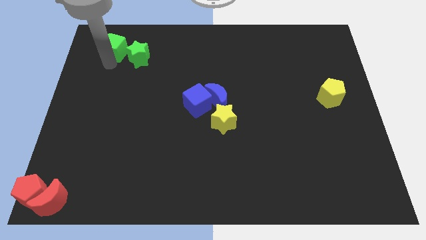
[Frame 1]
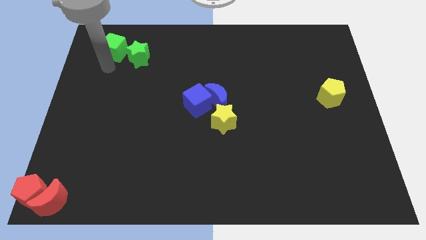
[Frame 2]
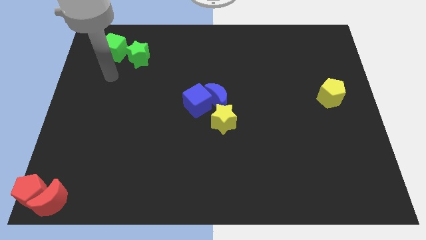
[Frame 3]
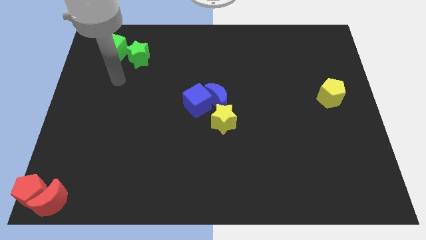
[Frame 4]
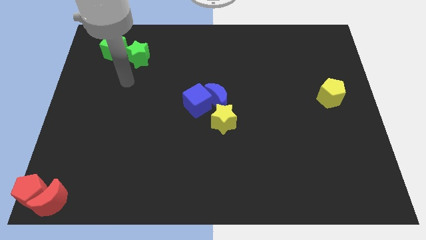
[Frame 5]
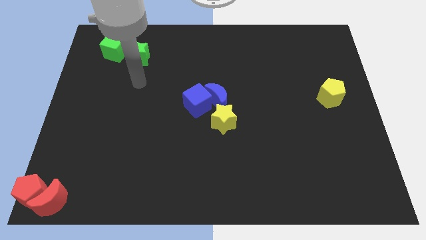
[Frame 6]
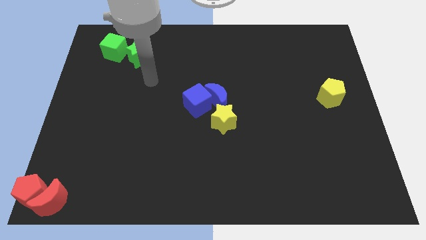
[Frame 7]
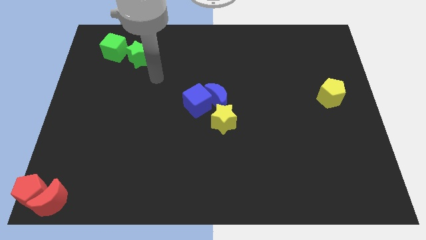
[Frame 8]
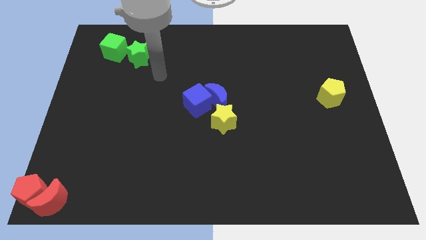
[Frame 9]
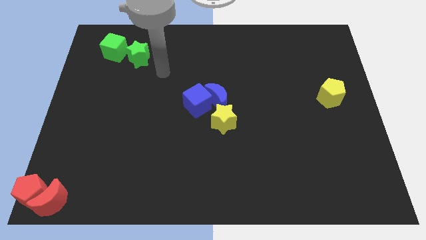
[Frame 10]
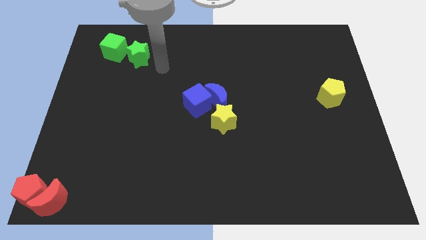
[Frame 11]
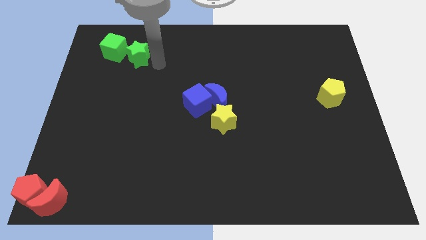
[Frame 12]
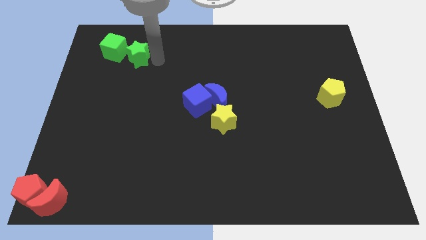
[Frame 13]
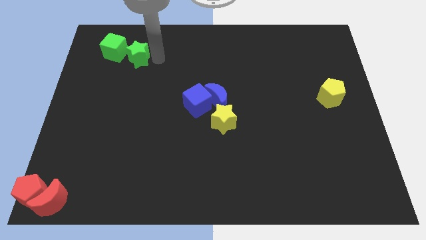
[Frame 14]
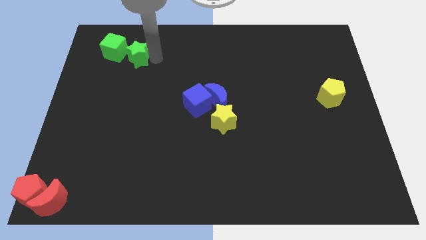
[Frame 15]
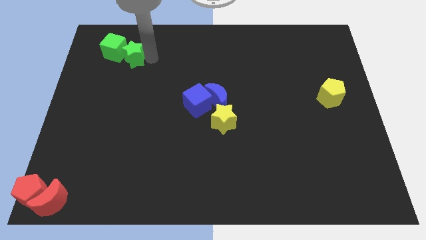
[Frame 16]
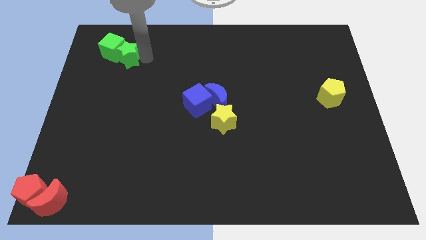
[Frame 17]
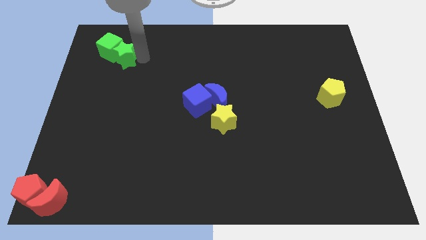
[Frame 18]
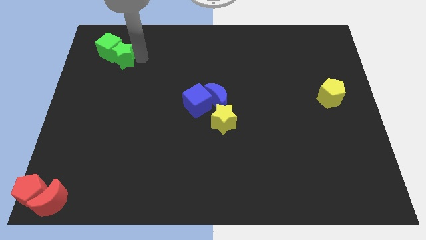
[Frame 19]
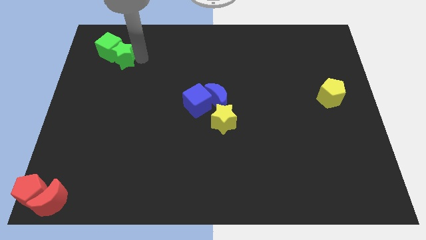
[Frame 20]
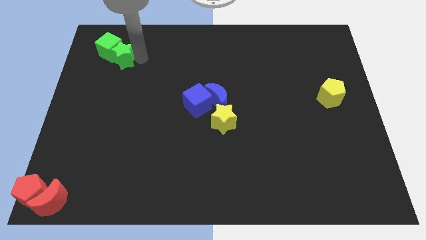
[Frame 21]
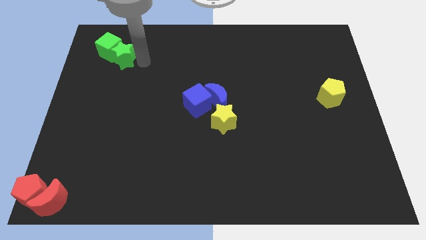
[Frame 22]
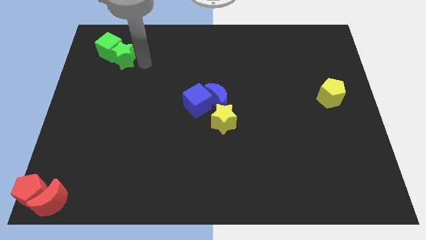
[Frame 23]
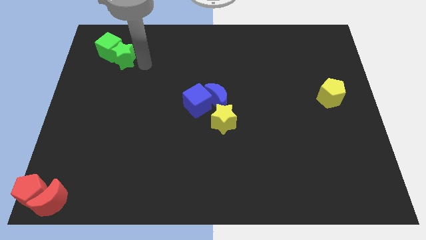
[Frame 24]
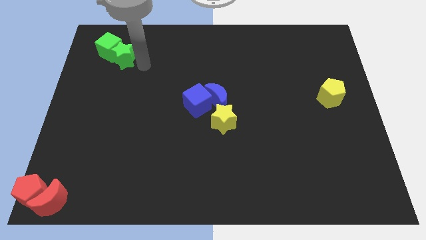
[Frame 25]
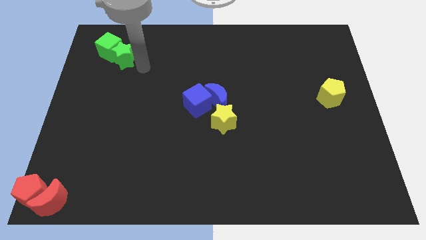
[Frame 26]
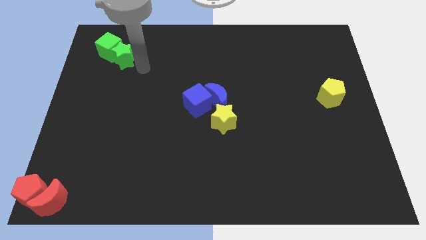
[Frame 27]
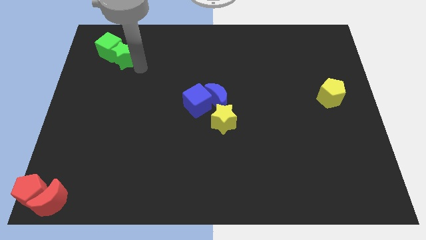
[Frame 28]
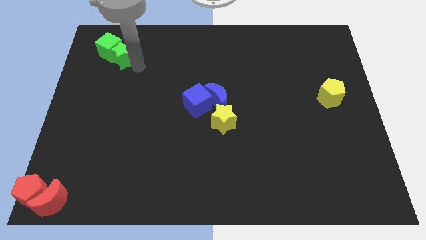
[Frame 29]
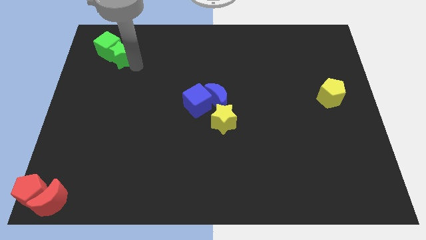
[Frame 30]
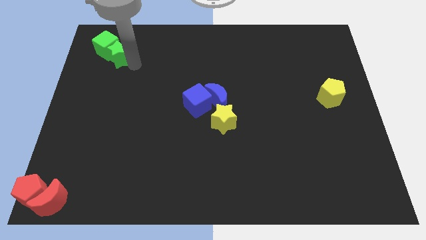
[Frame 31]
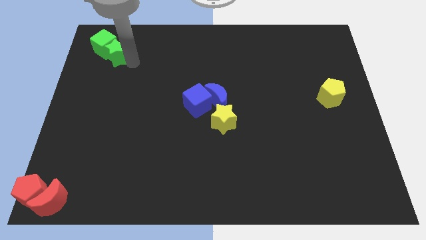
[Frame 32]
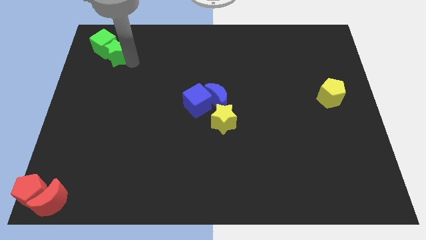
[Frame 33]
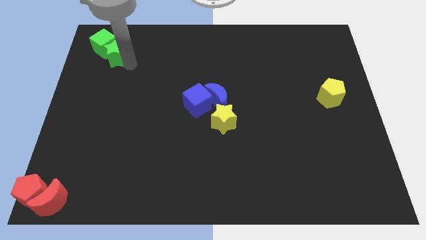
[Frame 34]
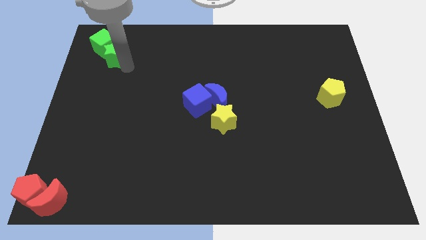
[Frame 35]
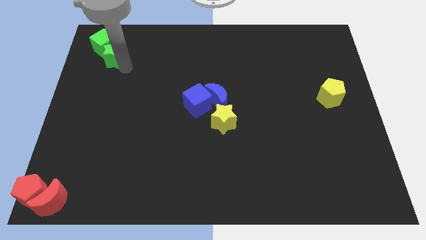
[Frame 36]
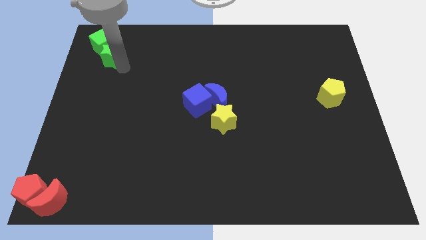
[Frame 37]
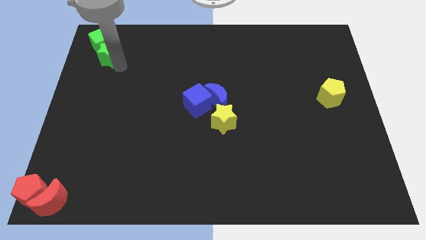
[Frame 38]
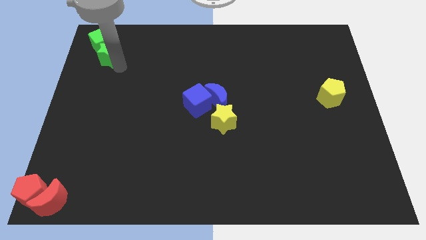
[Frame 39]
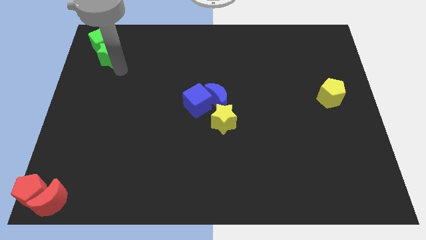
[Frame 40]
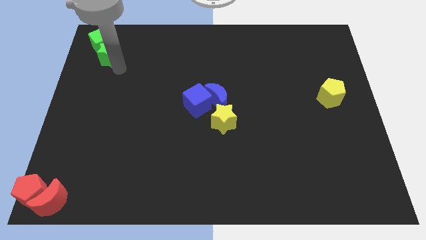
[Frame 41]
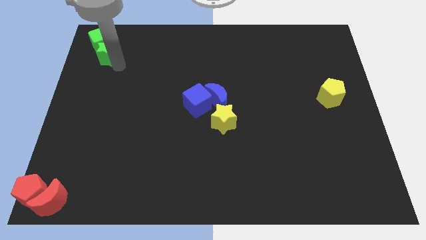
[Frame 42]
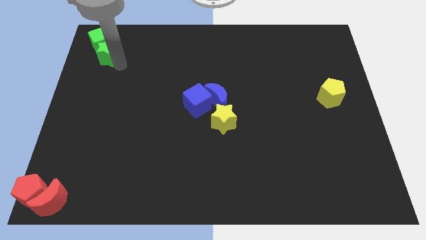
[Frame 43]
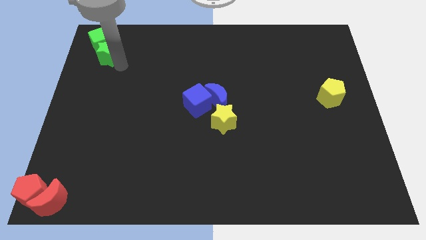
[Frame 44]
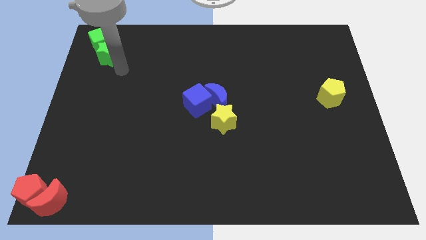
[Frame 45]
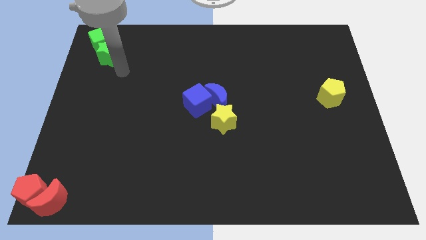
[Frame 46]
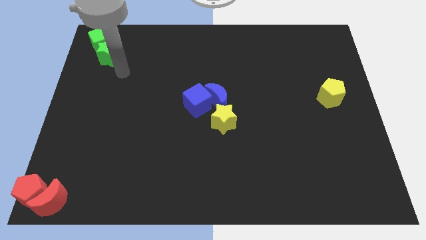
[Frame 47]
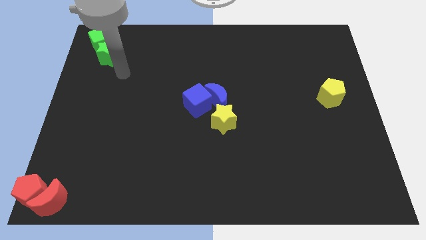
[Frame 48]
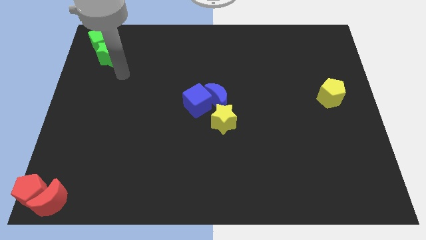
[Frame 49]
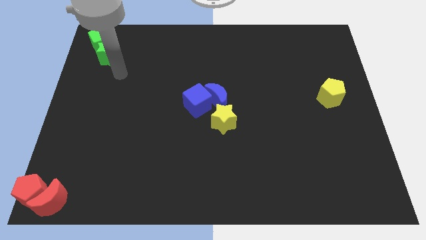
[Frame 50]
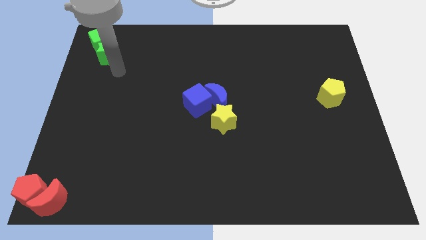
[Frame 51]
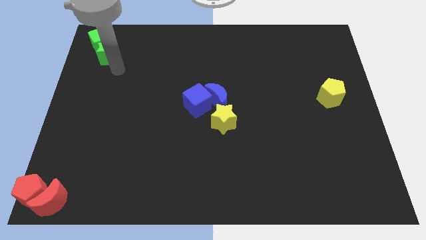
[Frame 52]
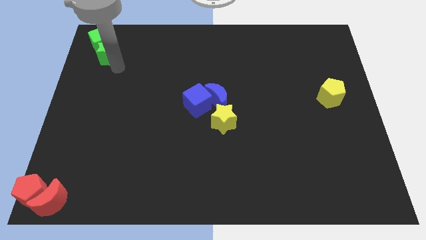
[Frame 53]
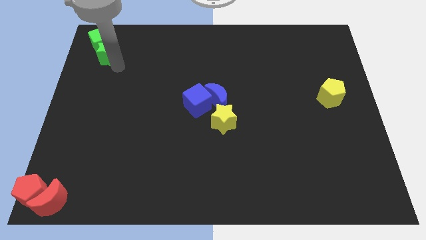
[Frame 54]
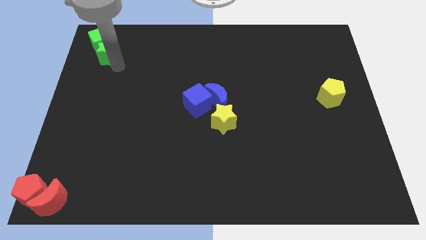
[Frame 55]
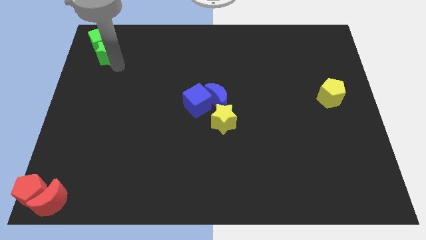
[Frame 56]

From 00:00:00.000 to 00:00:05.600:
move green blocks to top left corner of board

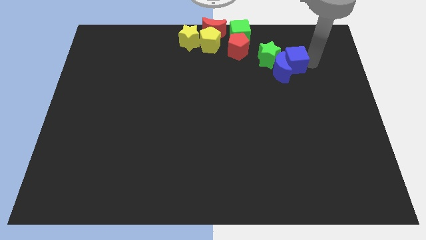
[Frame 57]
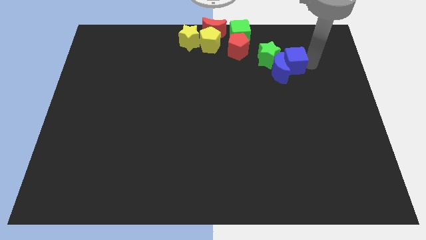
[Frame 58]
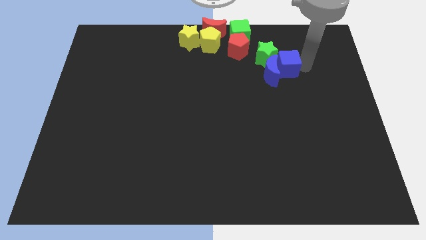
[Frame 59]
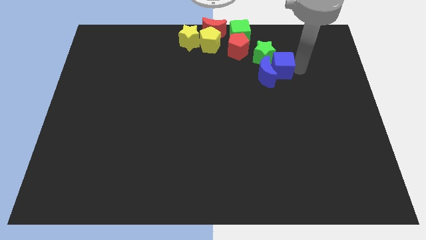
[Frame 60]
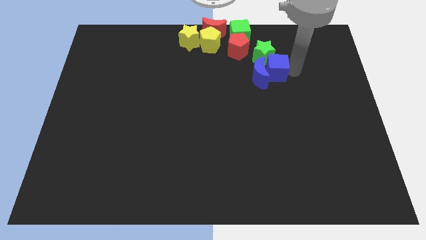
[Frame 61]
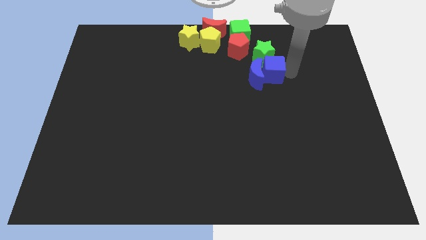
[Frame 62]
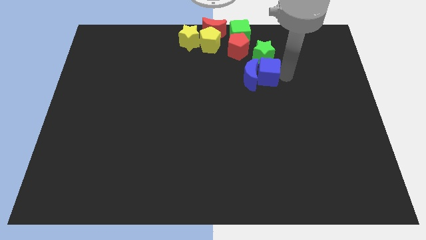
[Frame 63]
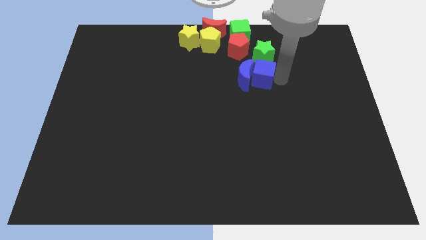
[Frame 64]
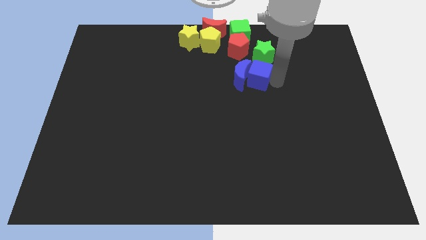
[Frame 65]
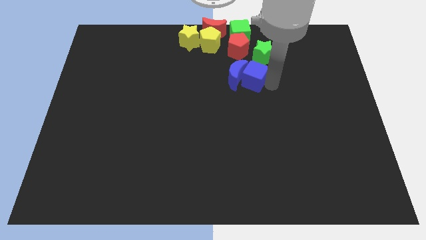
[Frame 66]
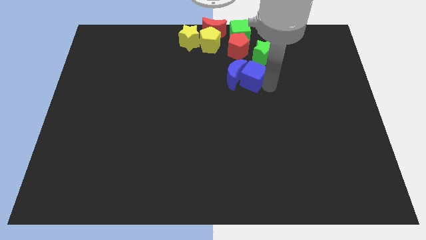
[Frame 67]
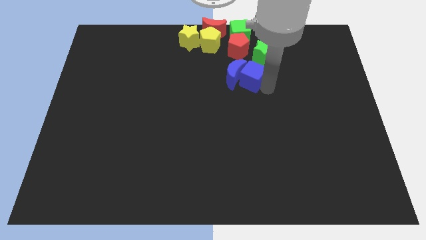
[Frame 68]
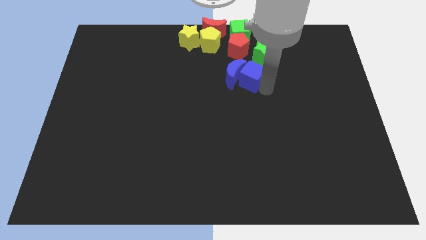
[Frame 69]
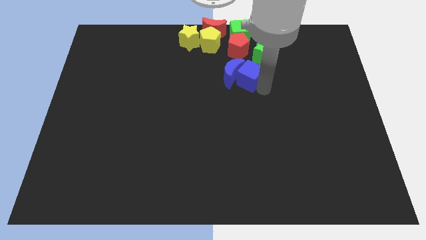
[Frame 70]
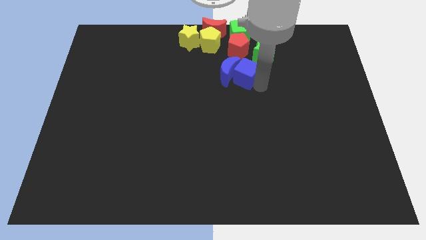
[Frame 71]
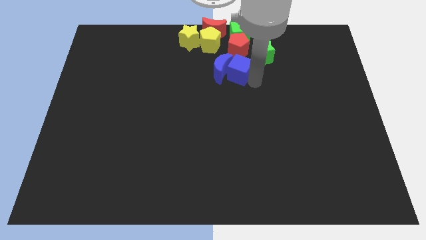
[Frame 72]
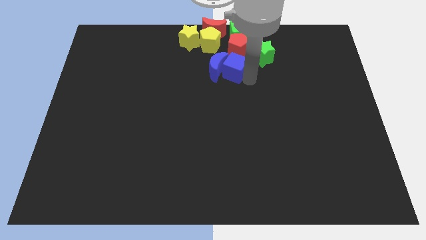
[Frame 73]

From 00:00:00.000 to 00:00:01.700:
separate the blue blocks from the green star

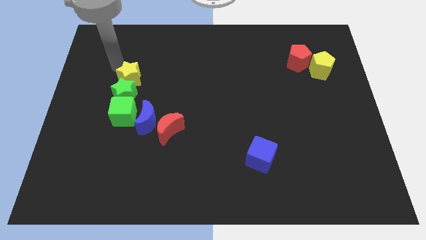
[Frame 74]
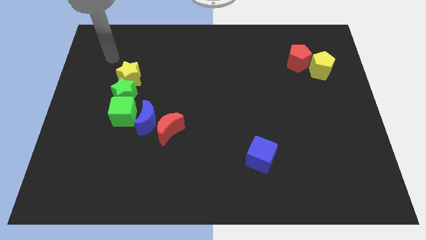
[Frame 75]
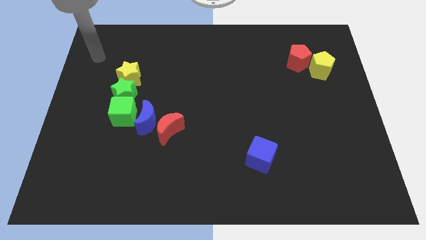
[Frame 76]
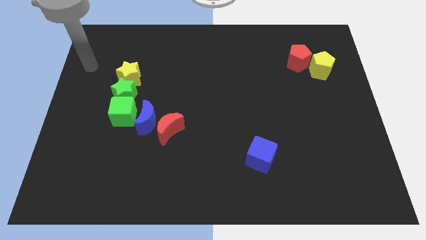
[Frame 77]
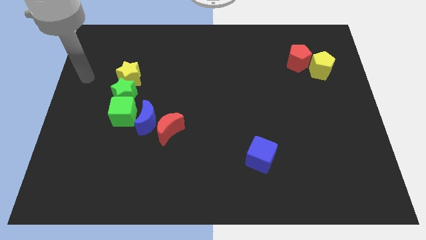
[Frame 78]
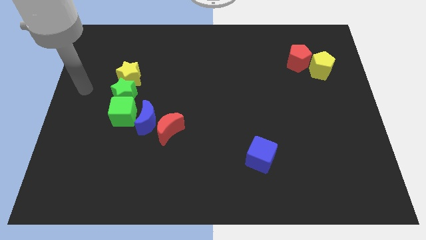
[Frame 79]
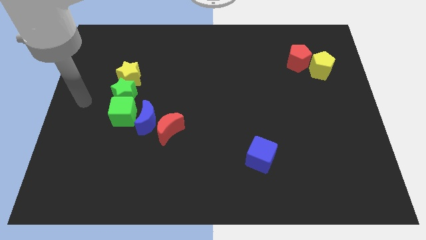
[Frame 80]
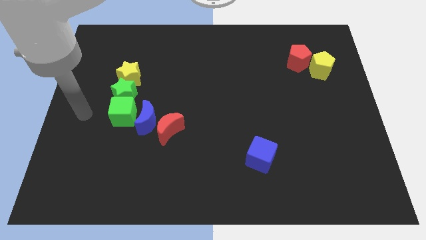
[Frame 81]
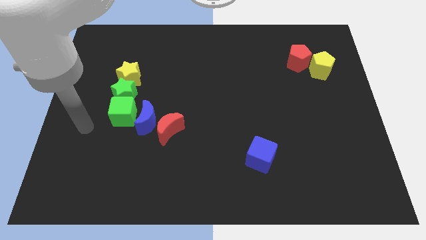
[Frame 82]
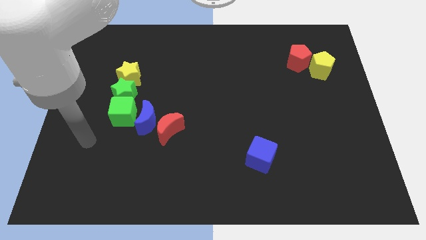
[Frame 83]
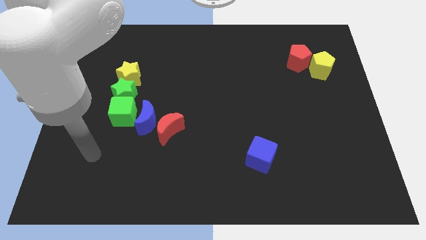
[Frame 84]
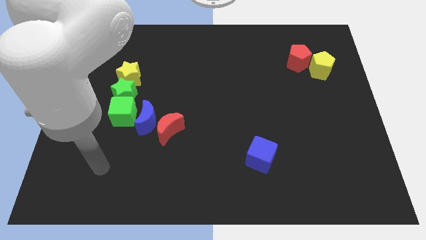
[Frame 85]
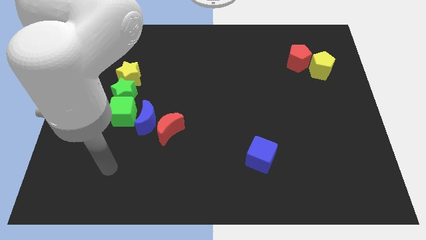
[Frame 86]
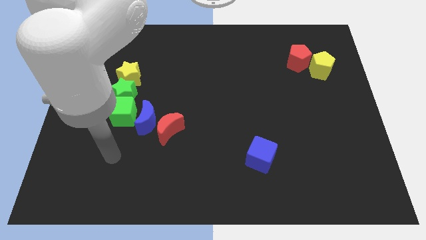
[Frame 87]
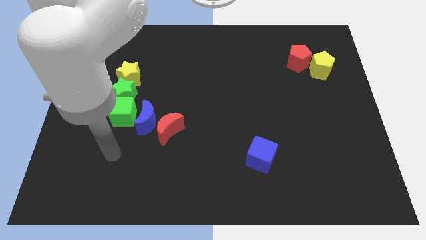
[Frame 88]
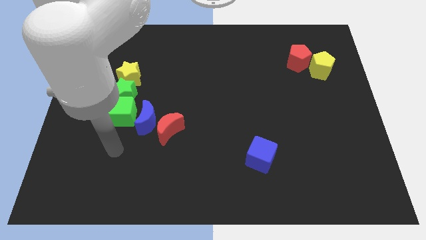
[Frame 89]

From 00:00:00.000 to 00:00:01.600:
move the arm towards the green cube
